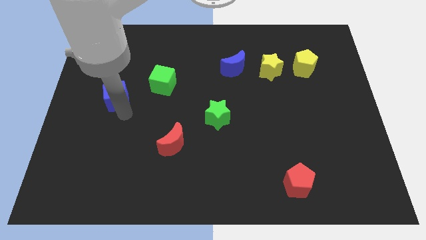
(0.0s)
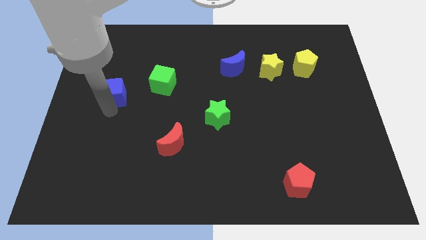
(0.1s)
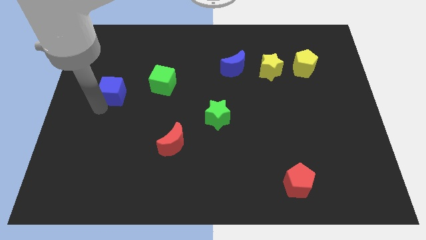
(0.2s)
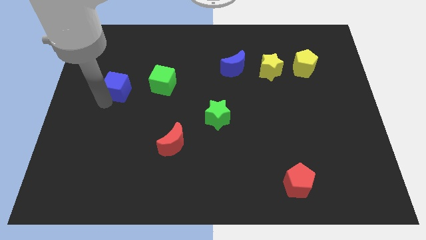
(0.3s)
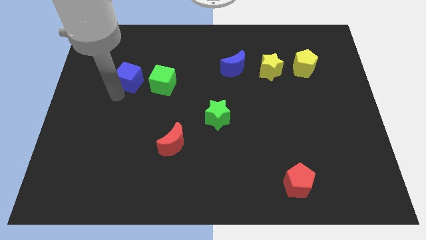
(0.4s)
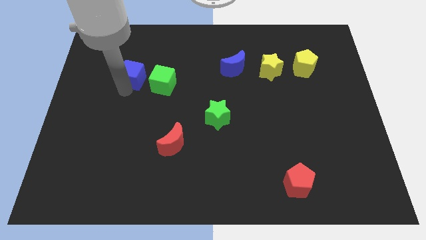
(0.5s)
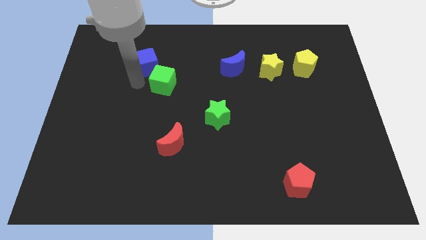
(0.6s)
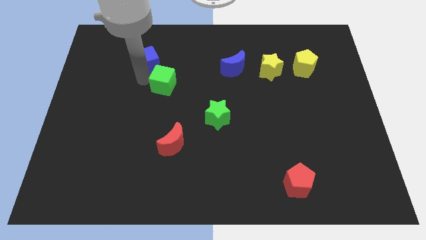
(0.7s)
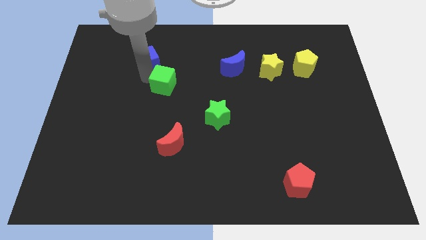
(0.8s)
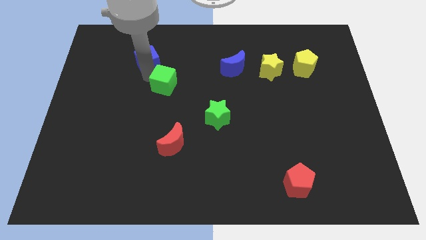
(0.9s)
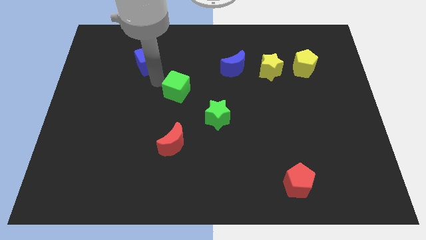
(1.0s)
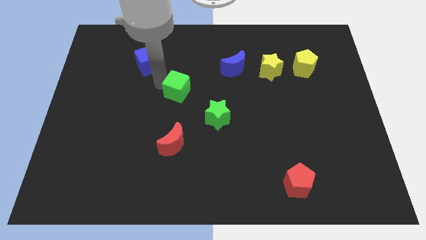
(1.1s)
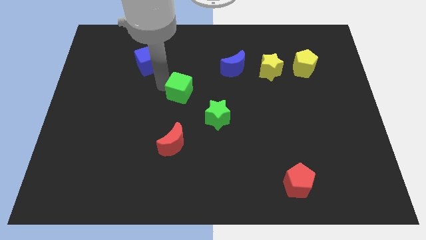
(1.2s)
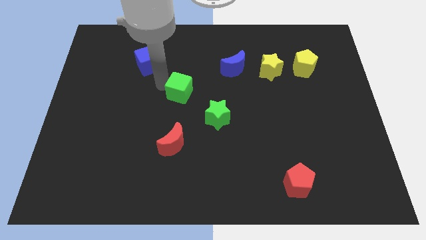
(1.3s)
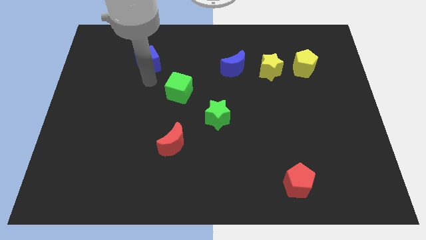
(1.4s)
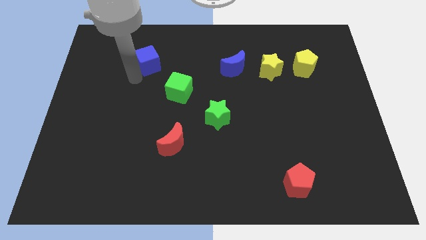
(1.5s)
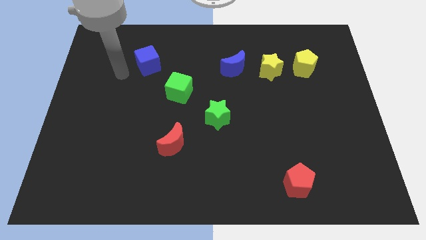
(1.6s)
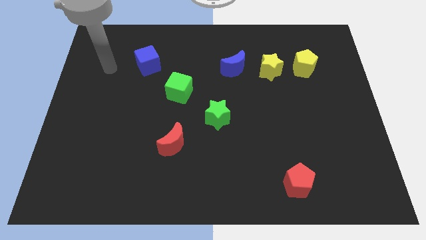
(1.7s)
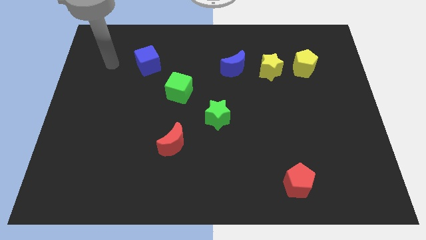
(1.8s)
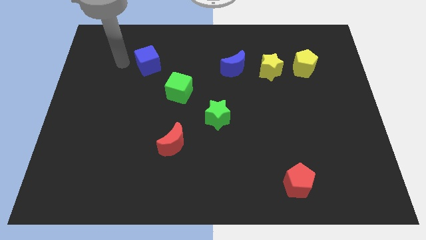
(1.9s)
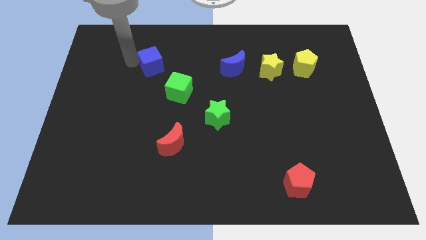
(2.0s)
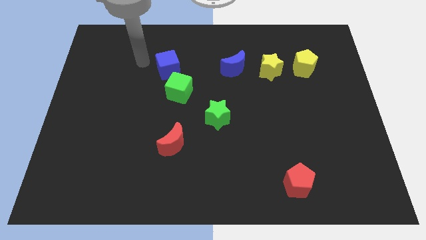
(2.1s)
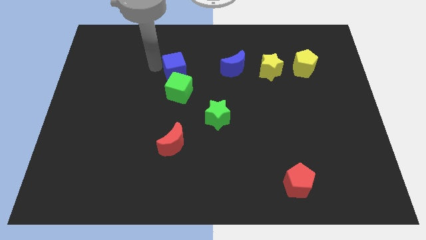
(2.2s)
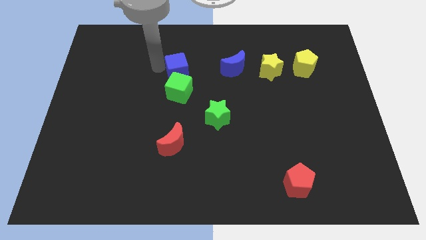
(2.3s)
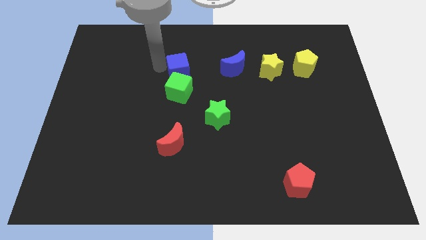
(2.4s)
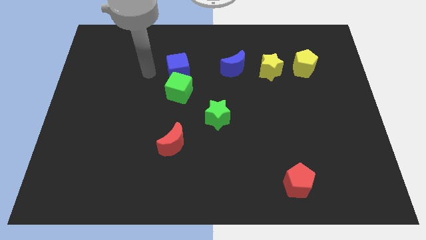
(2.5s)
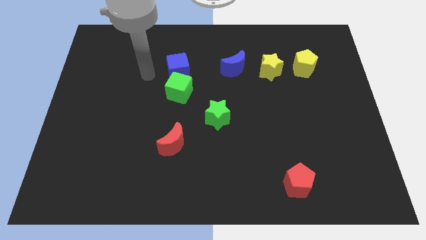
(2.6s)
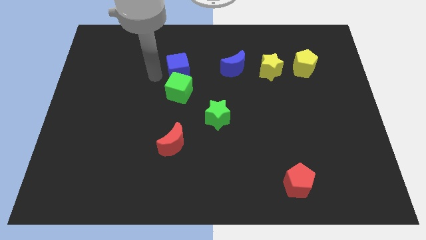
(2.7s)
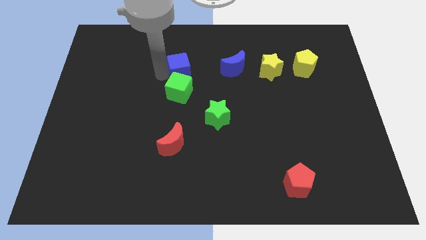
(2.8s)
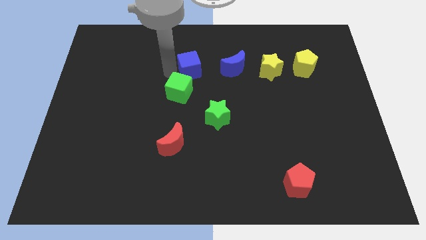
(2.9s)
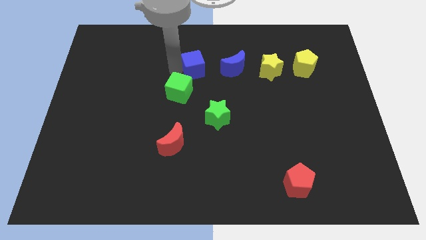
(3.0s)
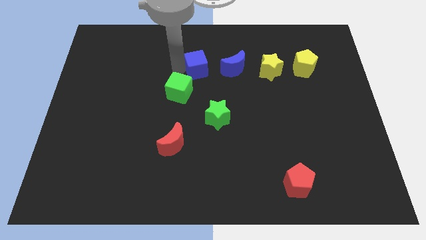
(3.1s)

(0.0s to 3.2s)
push blue cube above green star

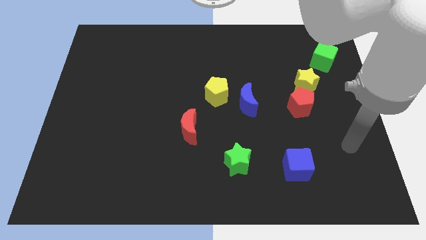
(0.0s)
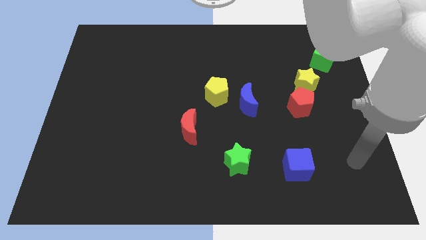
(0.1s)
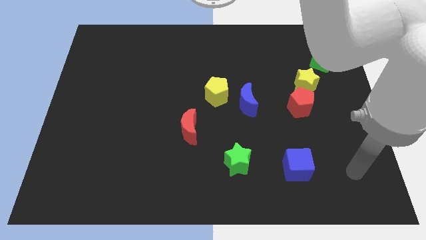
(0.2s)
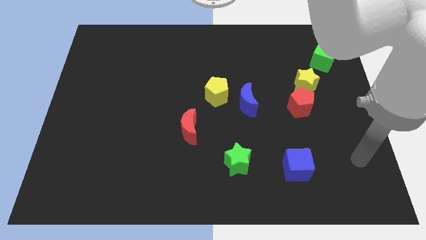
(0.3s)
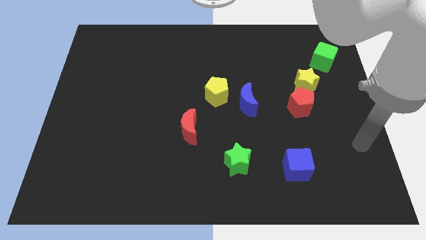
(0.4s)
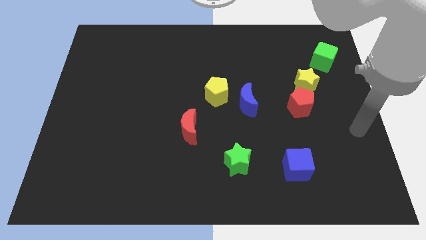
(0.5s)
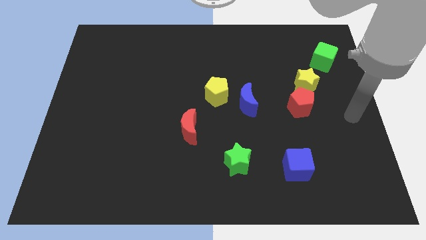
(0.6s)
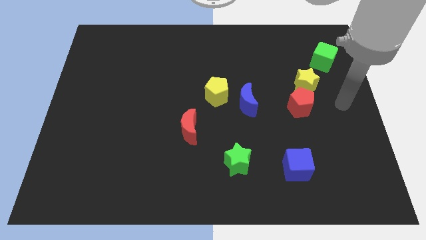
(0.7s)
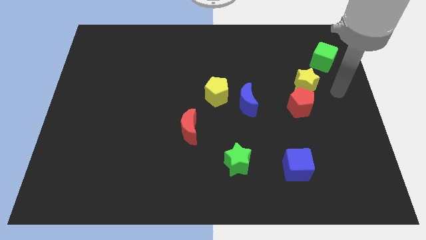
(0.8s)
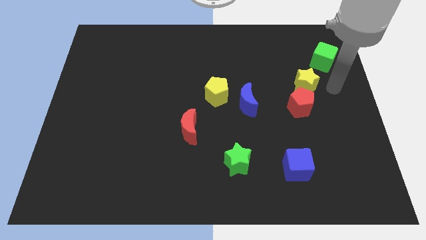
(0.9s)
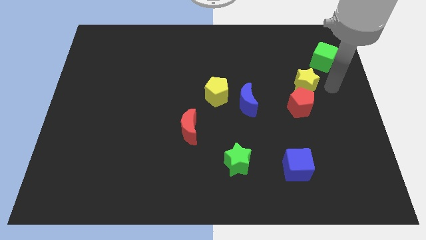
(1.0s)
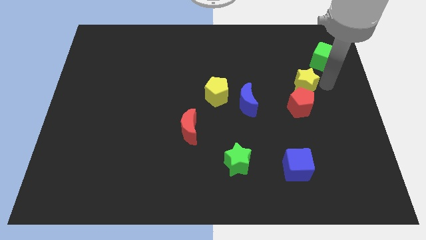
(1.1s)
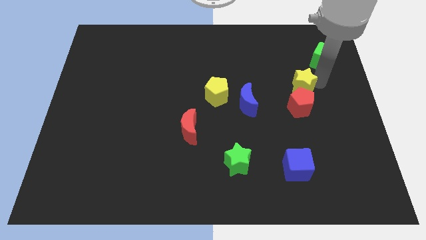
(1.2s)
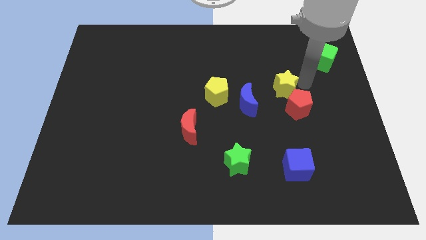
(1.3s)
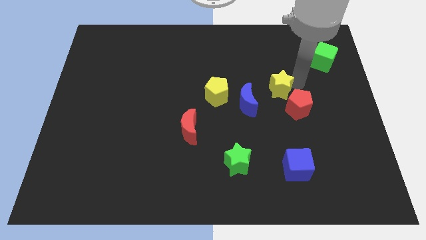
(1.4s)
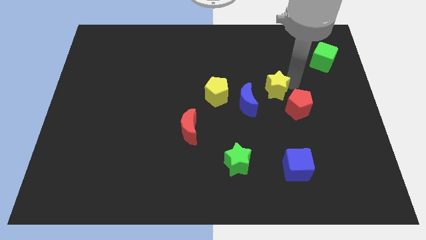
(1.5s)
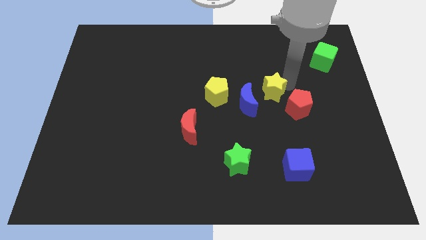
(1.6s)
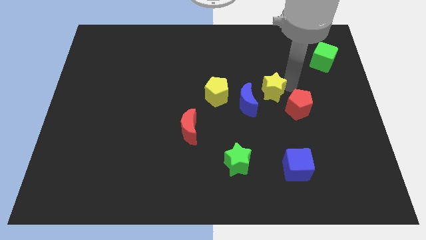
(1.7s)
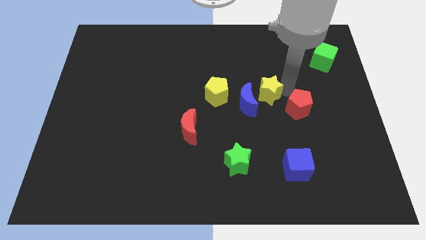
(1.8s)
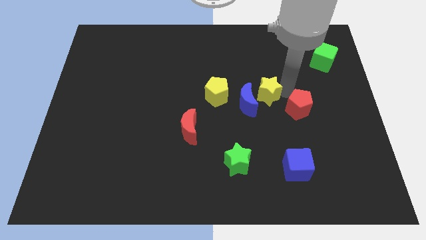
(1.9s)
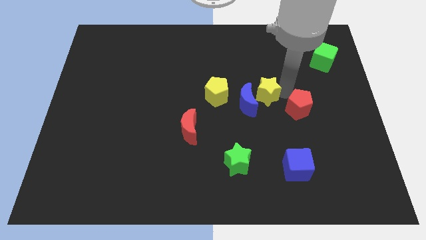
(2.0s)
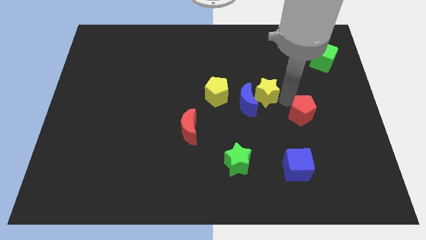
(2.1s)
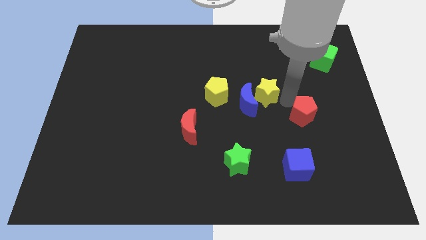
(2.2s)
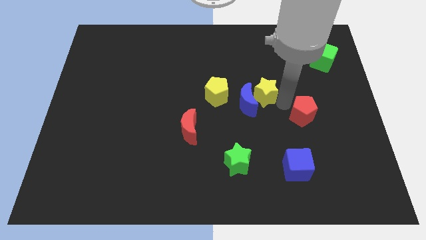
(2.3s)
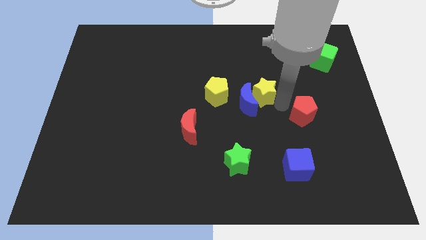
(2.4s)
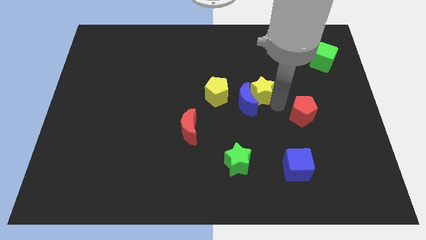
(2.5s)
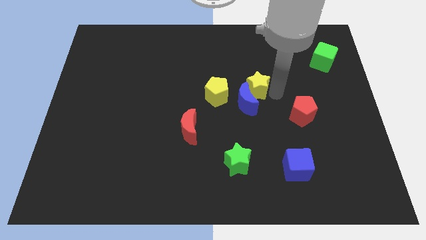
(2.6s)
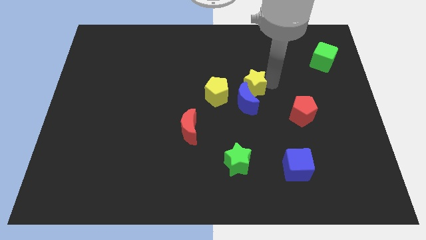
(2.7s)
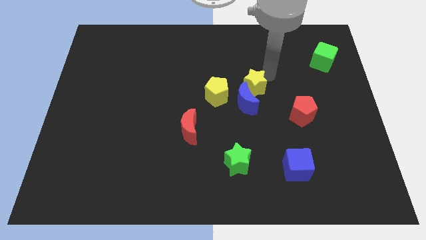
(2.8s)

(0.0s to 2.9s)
move the yellow star into the blue crescent

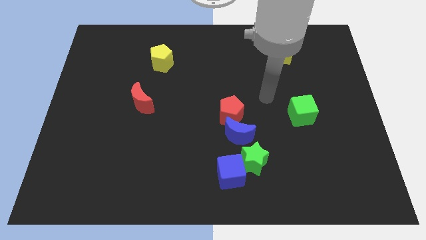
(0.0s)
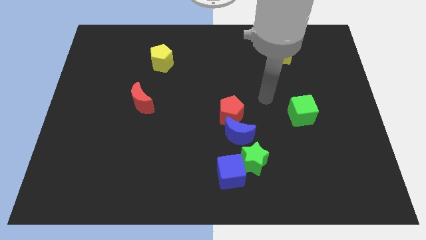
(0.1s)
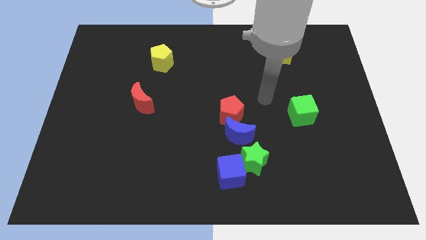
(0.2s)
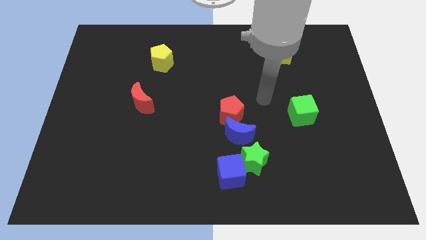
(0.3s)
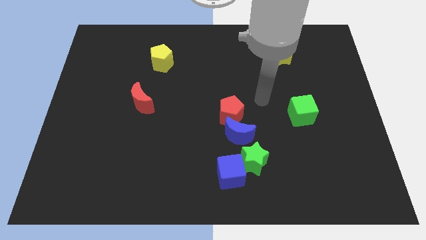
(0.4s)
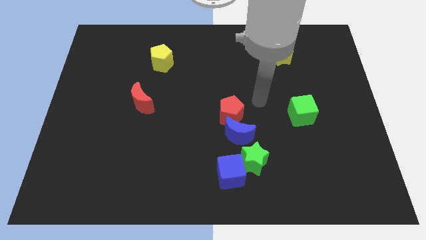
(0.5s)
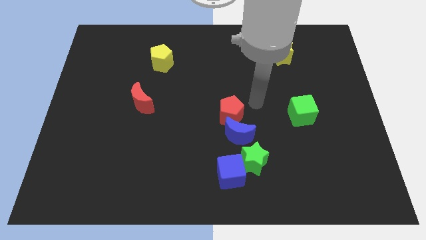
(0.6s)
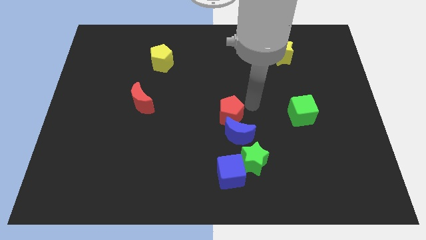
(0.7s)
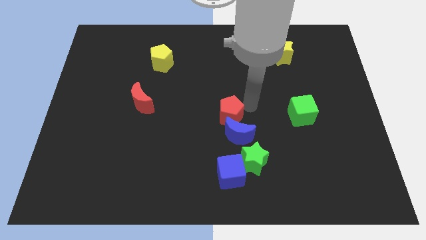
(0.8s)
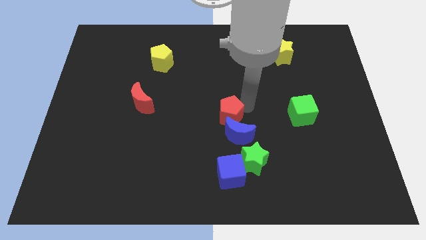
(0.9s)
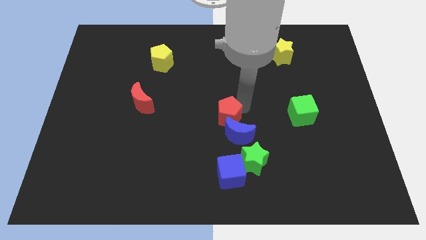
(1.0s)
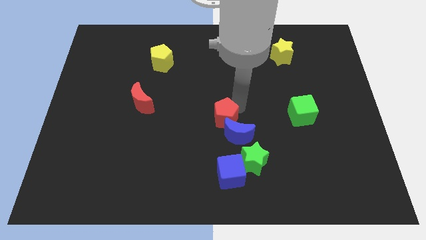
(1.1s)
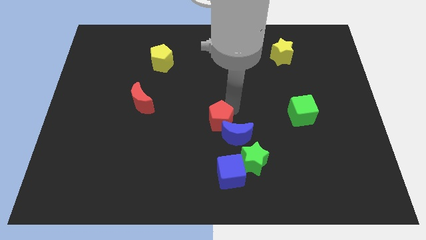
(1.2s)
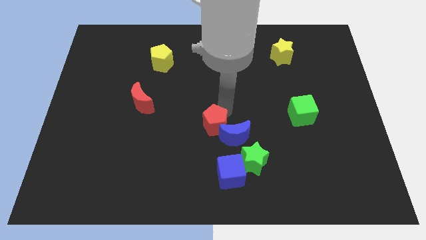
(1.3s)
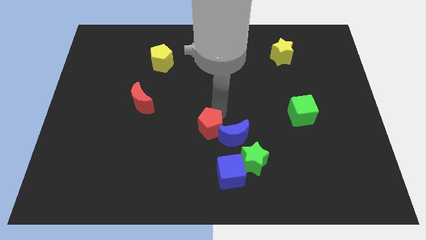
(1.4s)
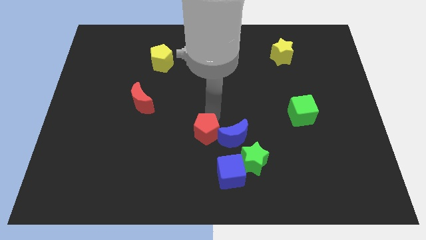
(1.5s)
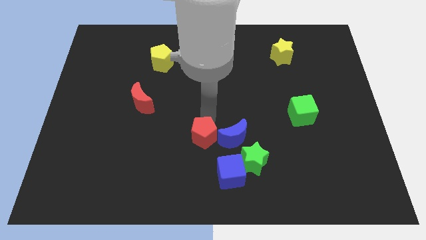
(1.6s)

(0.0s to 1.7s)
slightly push the red pentagon to the left of the blue crescent

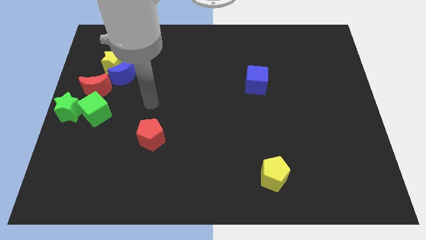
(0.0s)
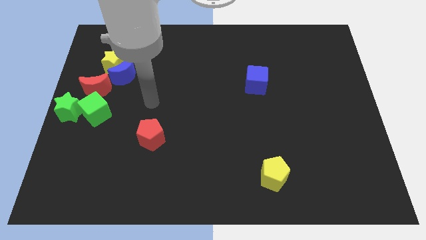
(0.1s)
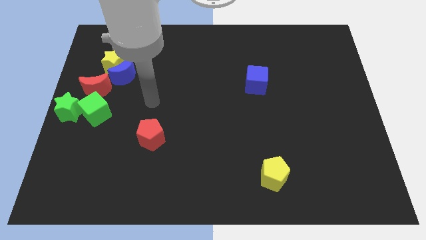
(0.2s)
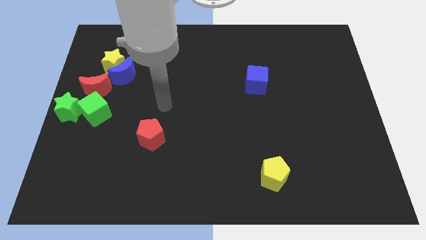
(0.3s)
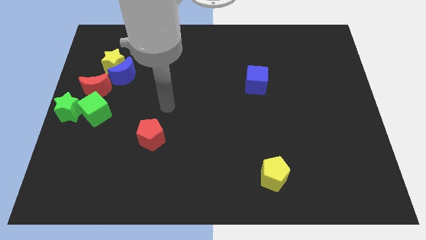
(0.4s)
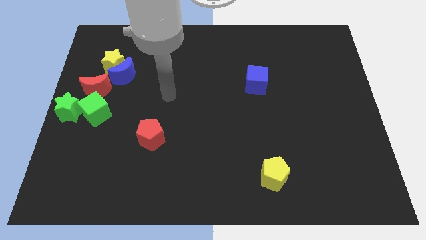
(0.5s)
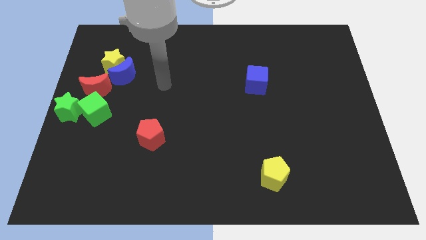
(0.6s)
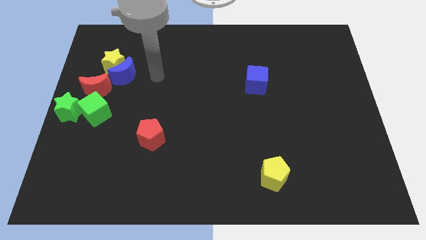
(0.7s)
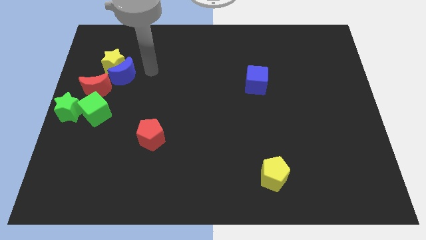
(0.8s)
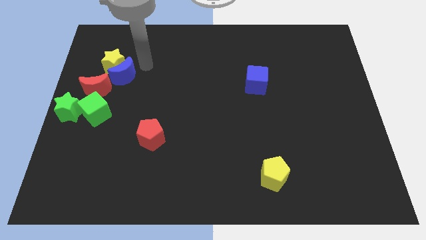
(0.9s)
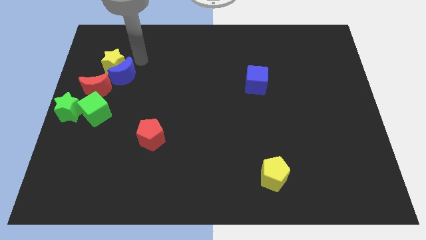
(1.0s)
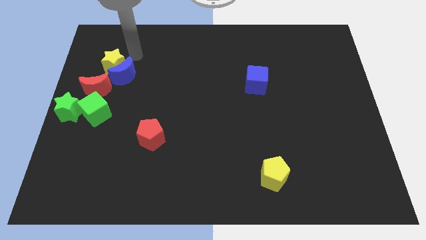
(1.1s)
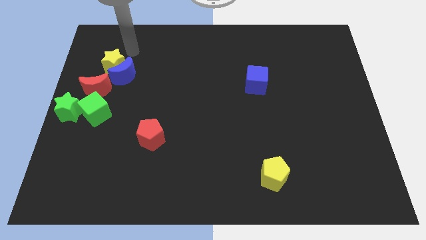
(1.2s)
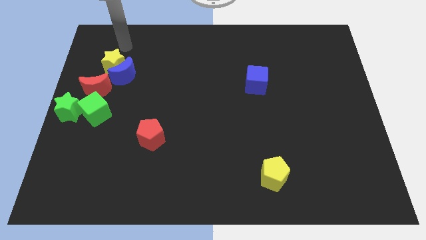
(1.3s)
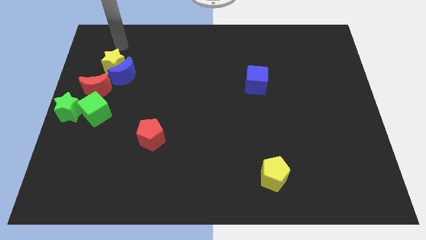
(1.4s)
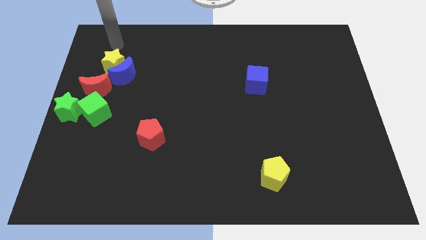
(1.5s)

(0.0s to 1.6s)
place your arm to the top of the yellow star
